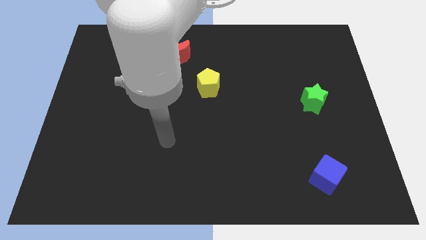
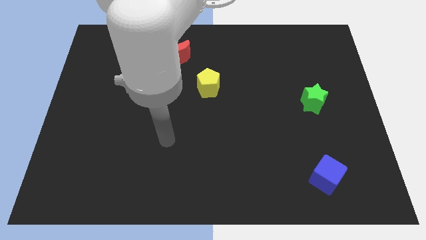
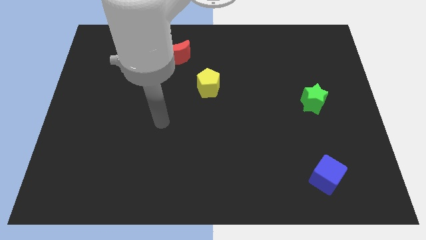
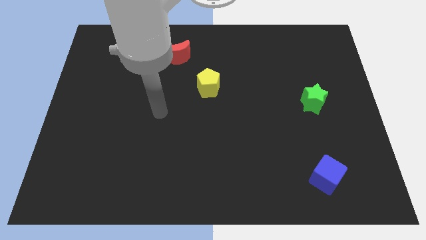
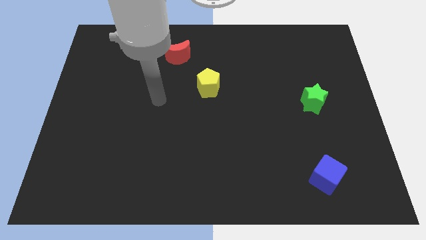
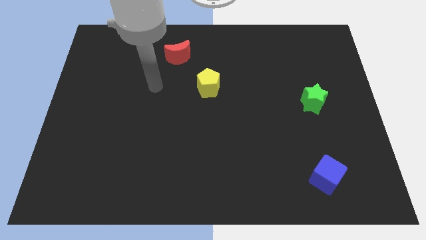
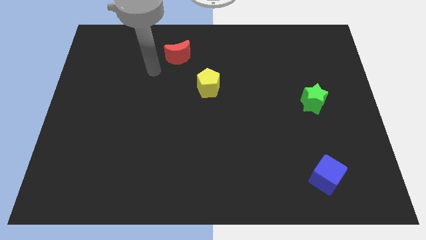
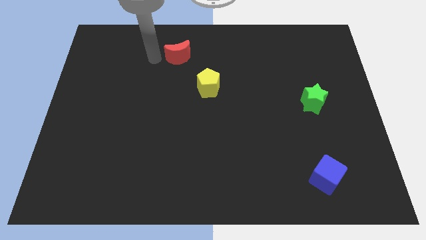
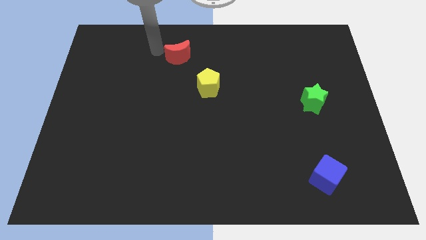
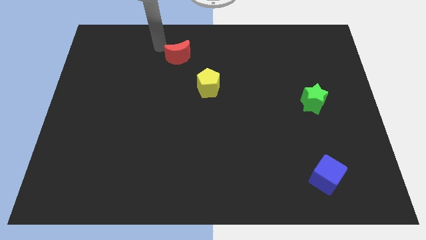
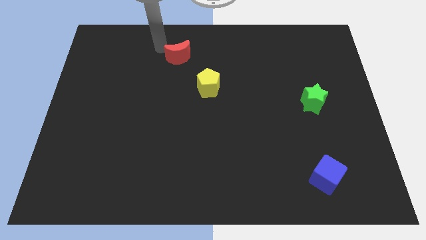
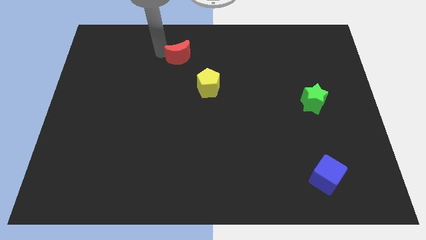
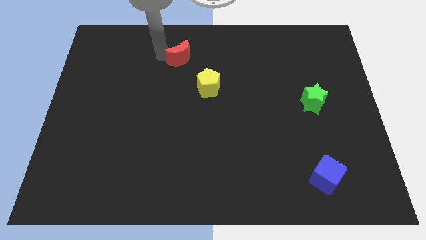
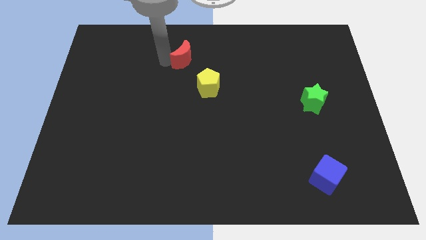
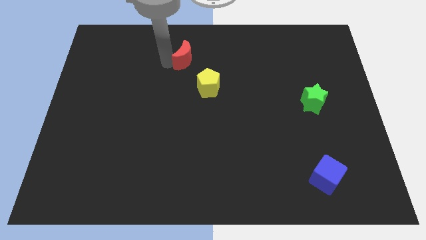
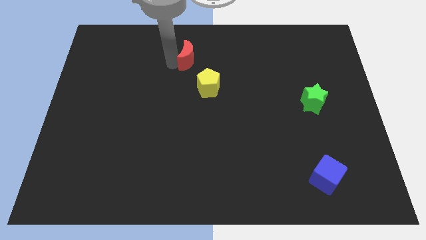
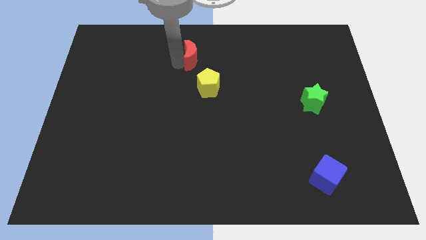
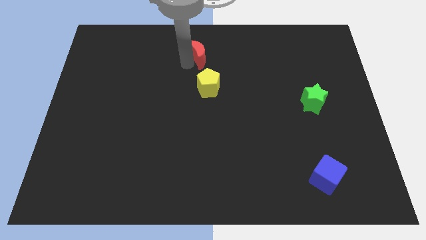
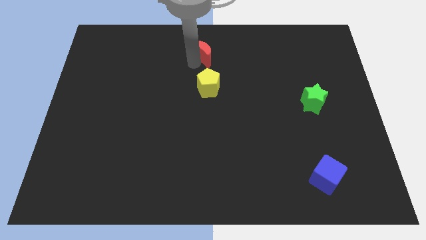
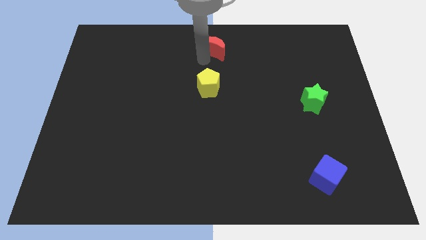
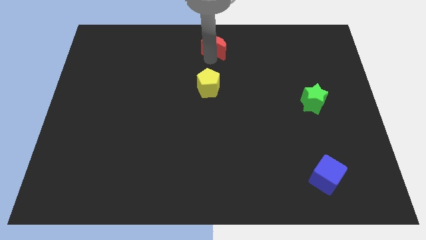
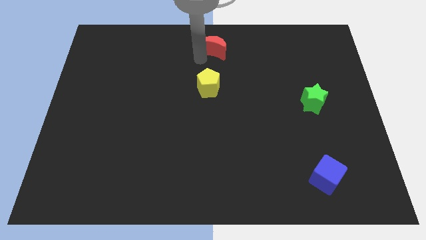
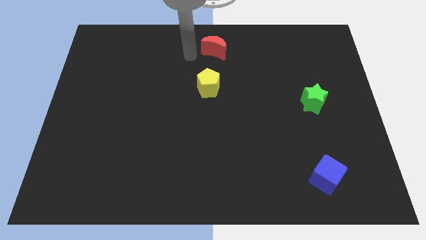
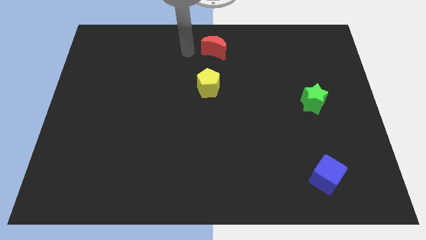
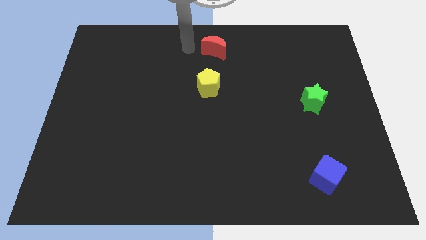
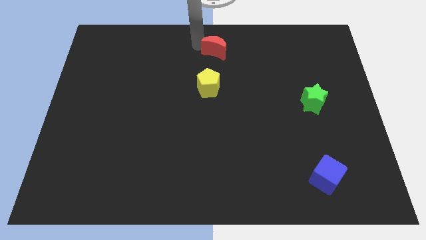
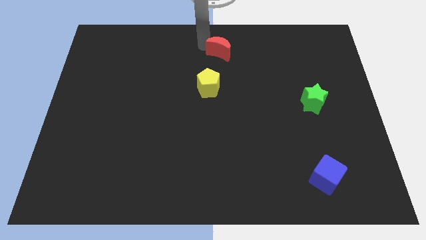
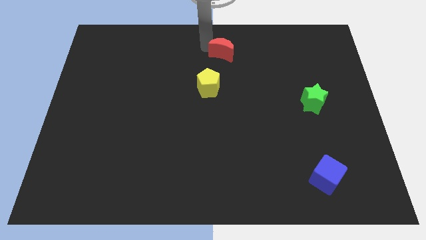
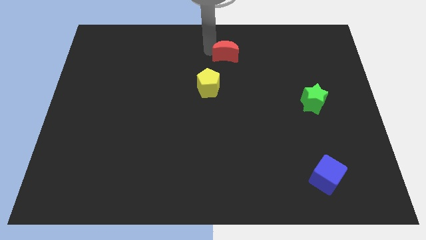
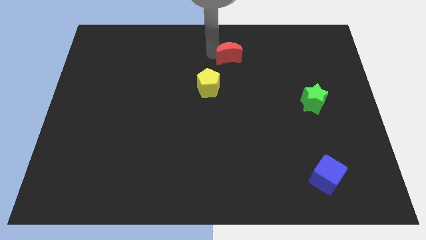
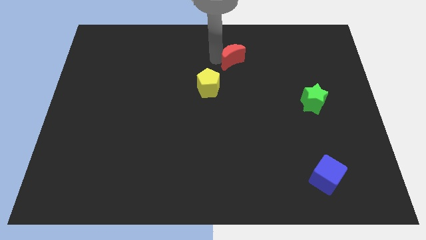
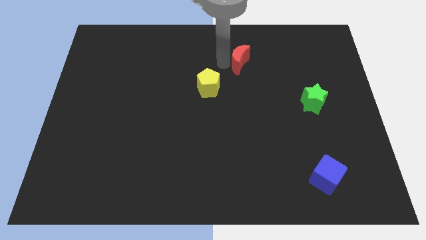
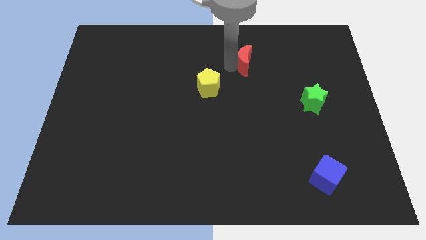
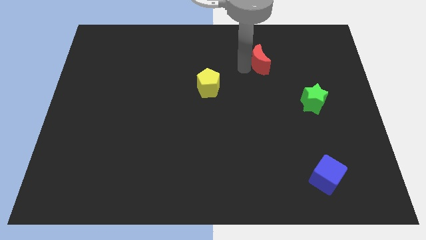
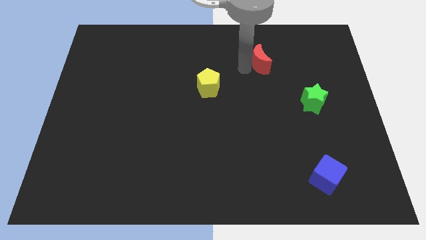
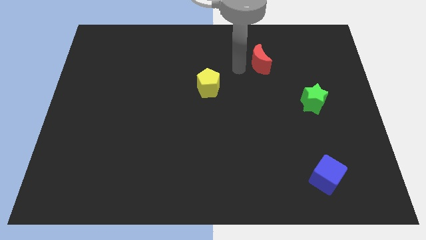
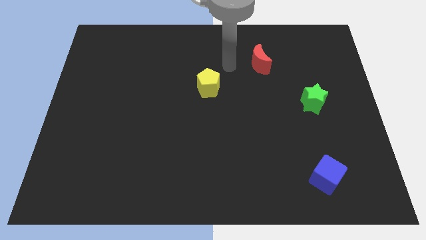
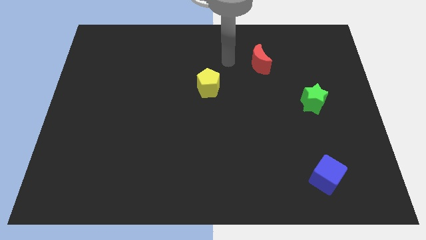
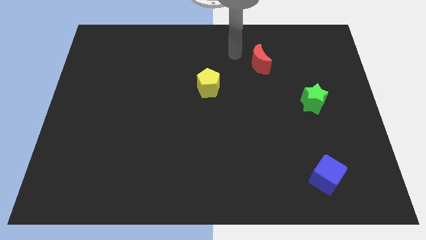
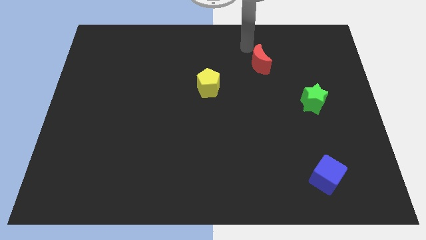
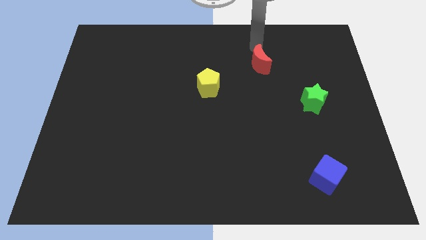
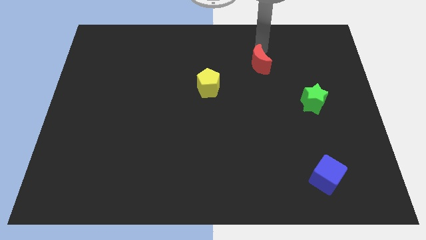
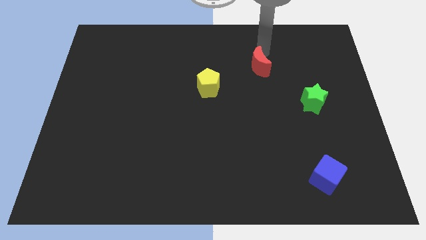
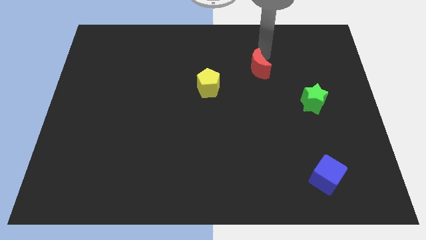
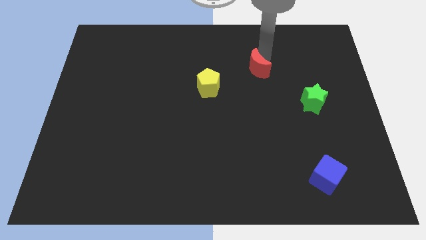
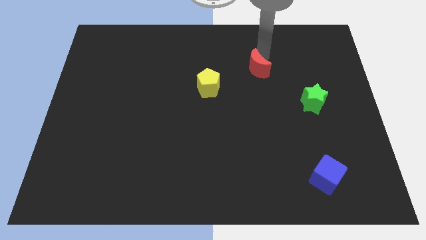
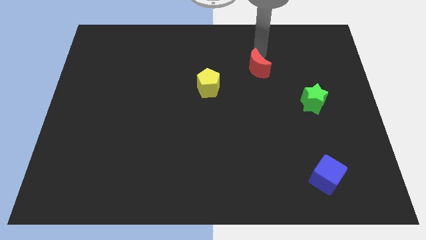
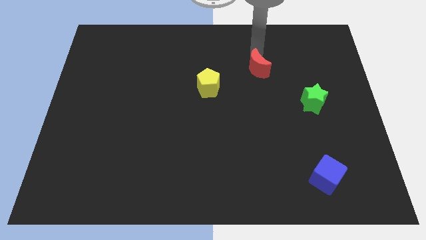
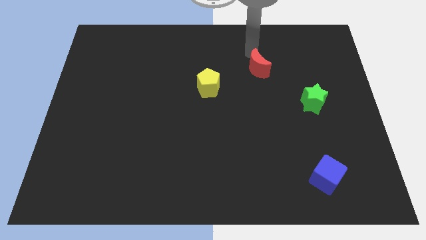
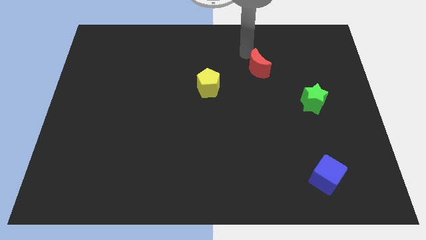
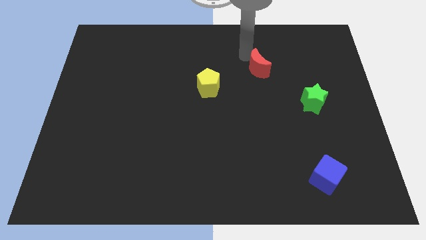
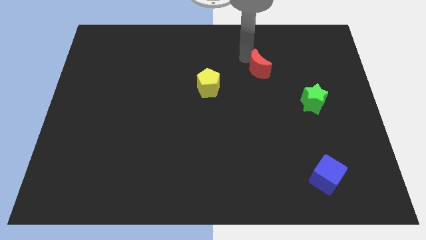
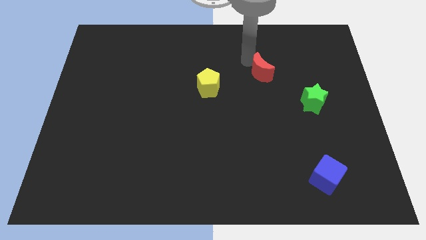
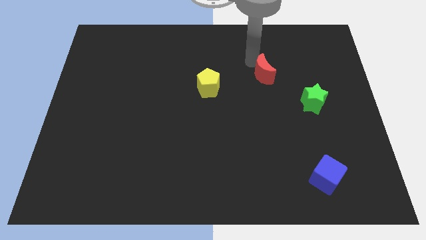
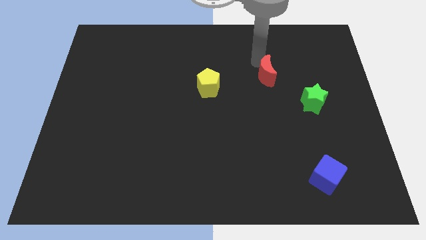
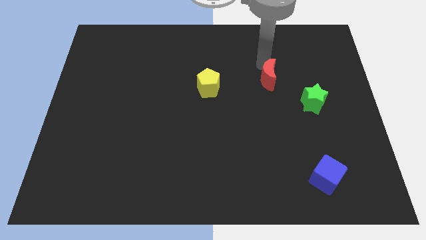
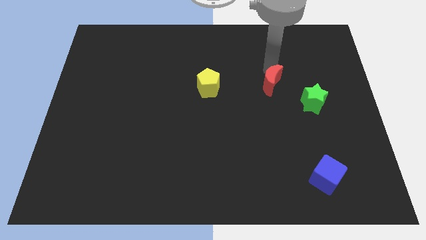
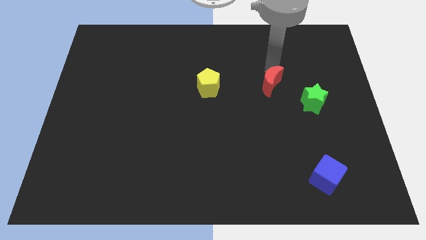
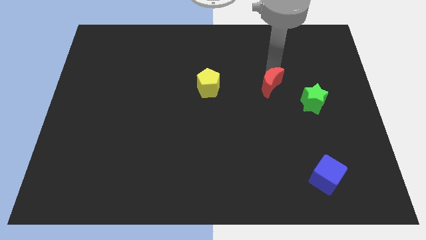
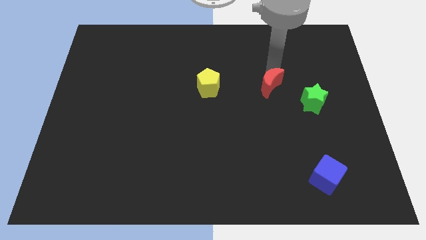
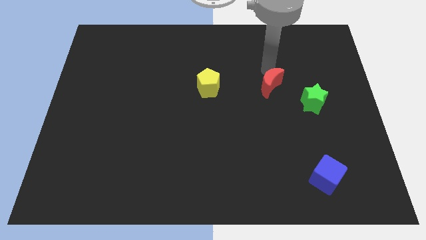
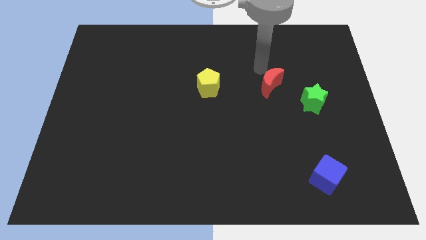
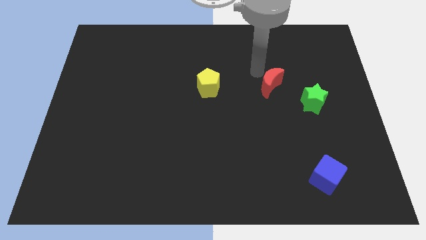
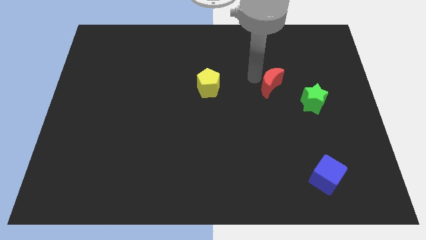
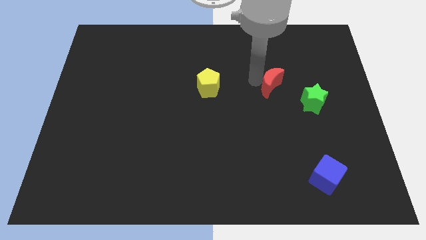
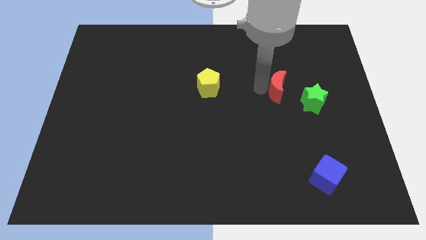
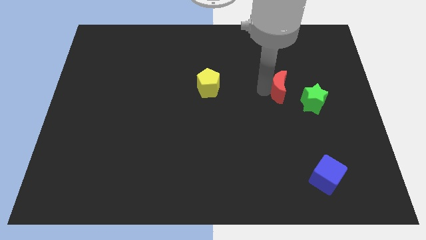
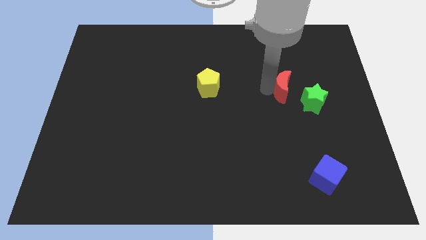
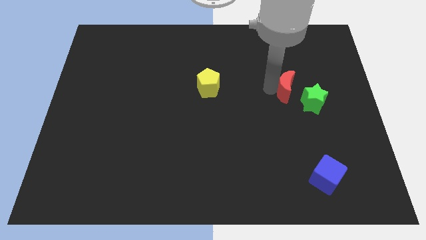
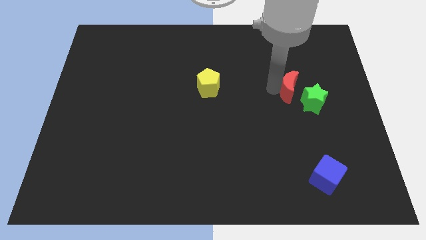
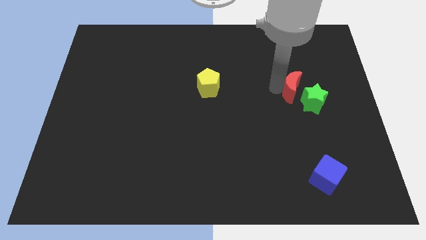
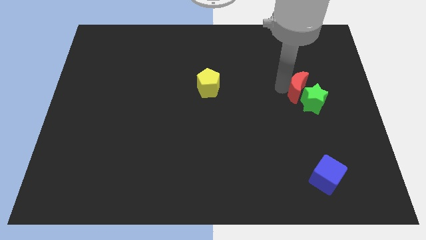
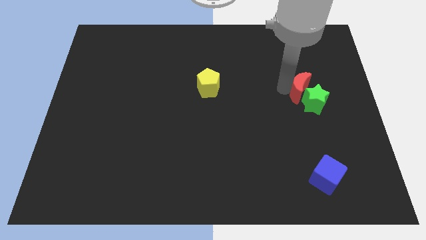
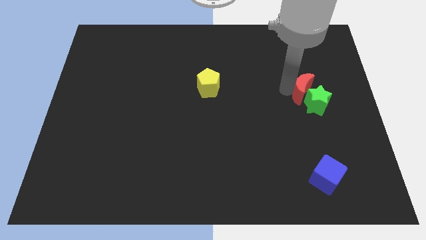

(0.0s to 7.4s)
push the red moon to the green block

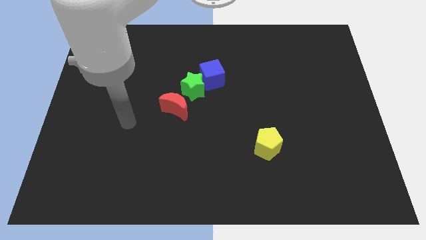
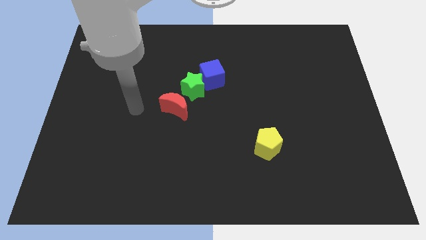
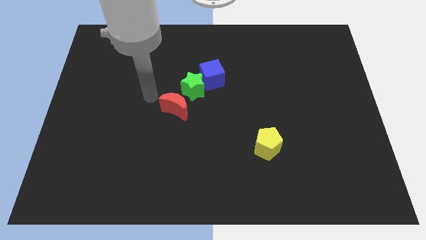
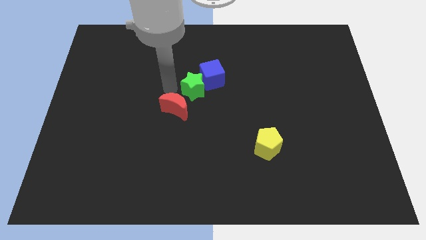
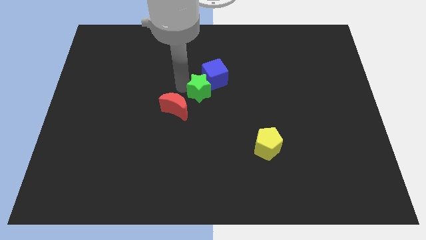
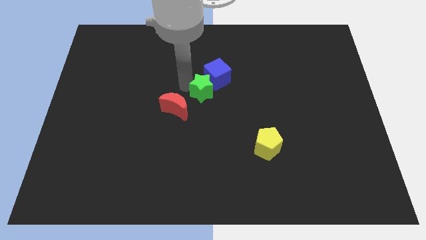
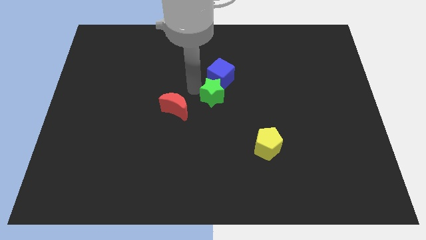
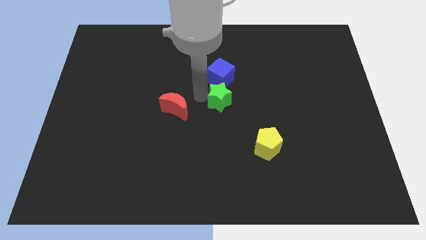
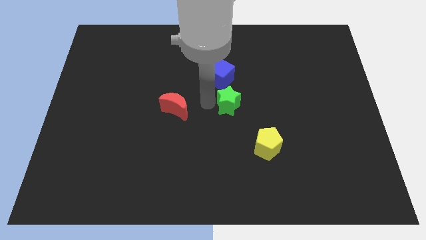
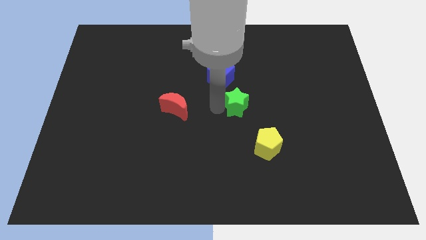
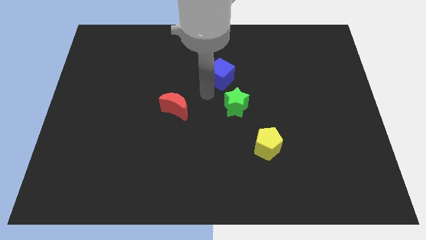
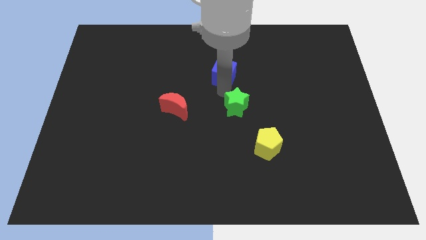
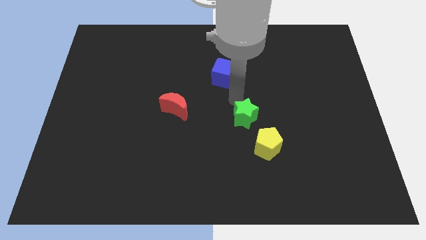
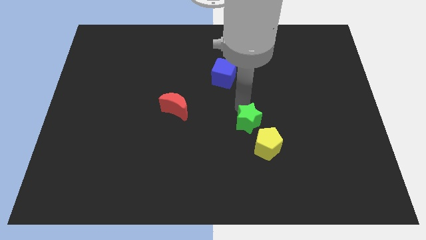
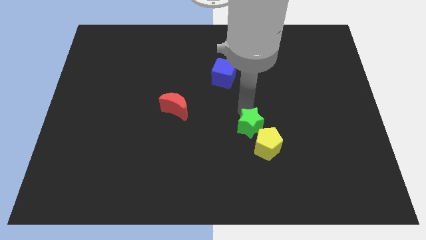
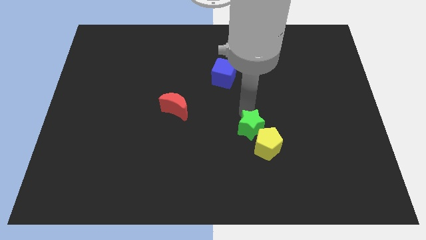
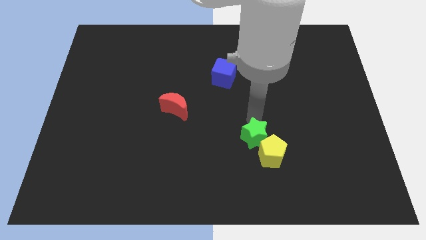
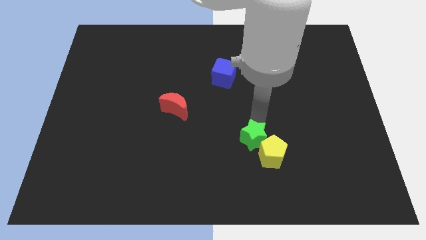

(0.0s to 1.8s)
move the green block to the yellow pentagon
